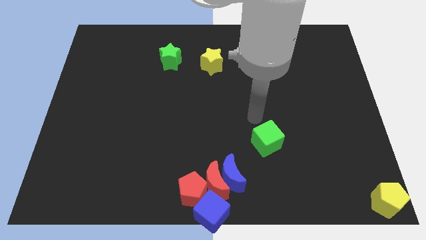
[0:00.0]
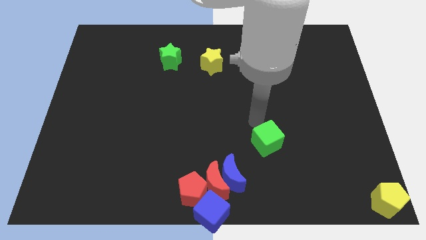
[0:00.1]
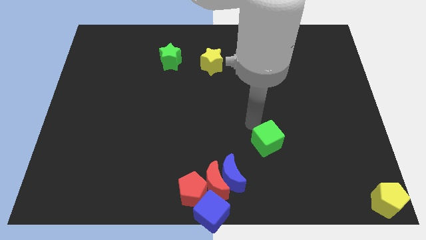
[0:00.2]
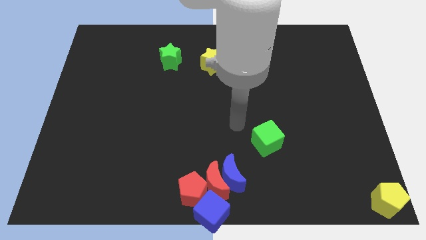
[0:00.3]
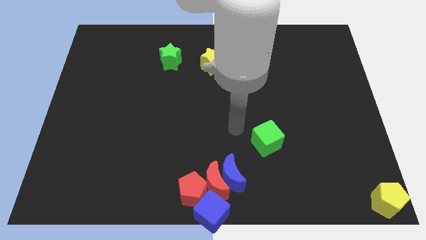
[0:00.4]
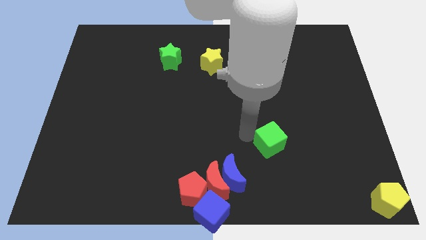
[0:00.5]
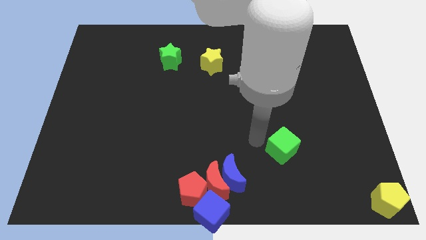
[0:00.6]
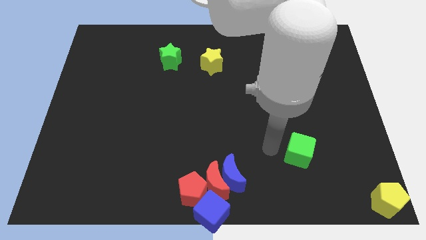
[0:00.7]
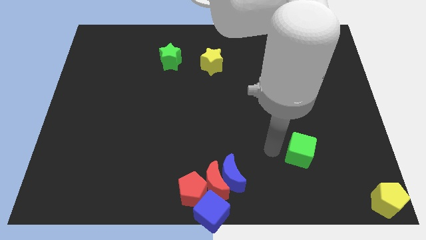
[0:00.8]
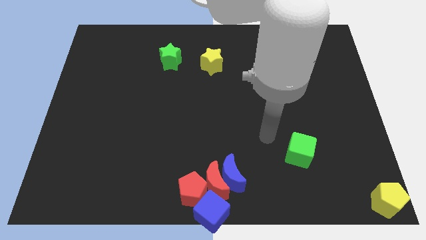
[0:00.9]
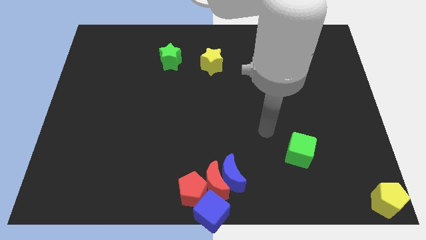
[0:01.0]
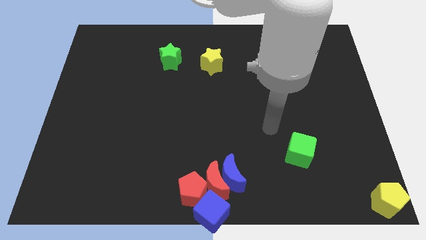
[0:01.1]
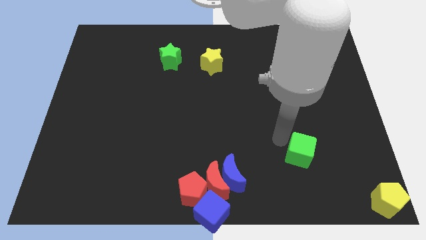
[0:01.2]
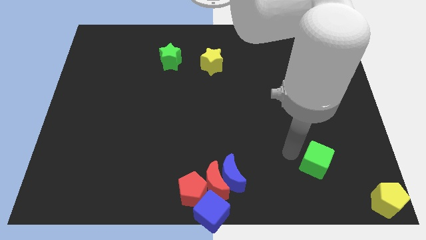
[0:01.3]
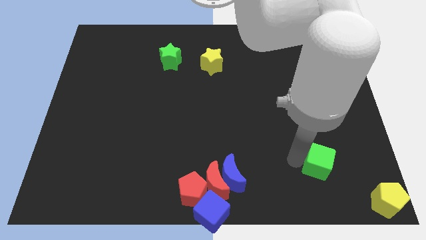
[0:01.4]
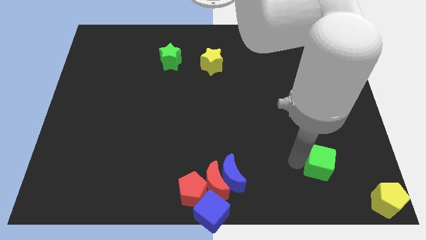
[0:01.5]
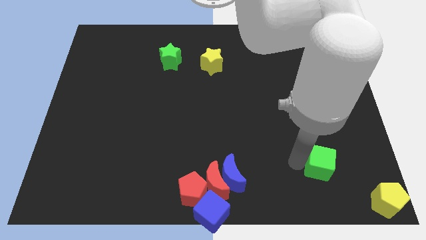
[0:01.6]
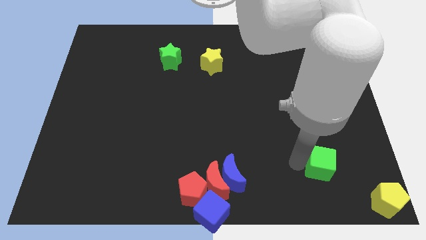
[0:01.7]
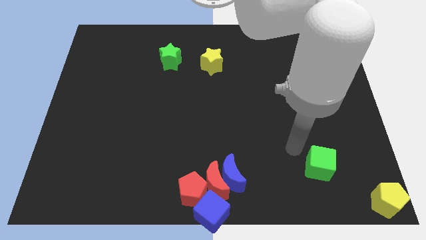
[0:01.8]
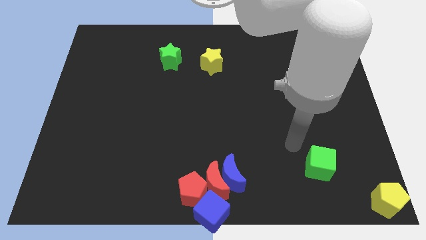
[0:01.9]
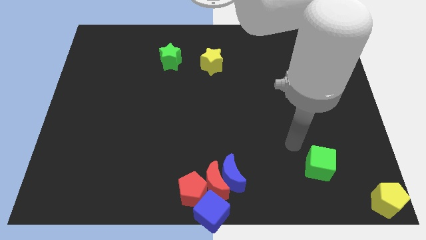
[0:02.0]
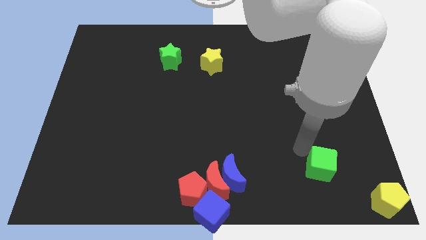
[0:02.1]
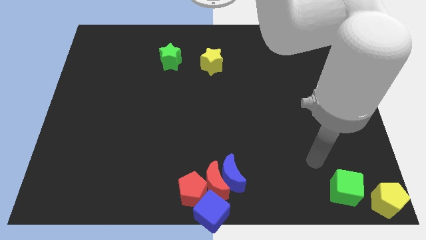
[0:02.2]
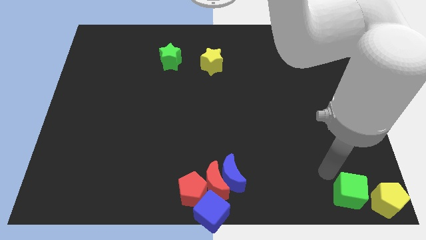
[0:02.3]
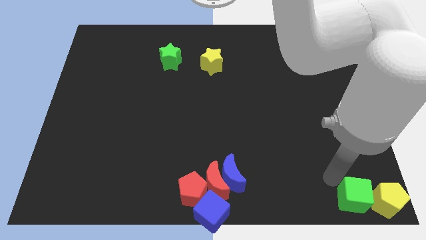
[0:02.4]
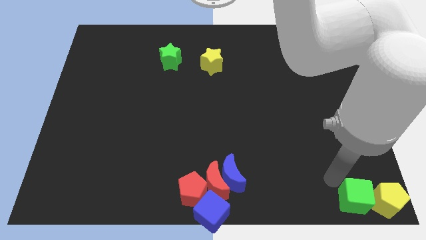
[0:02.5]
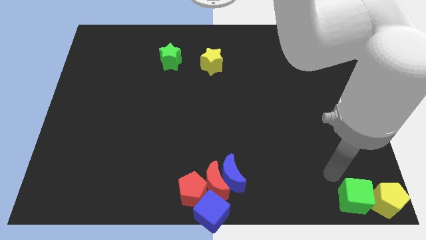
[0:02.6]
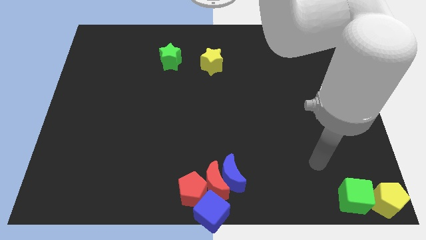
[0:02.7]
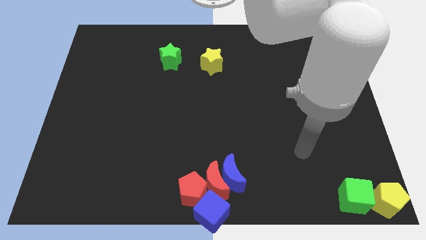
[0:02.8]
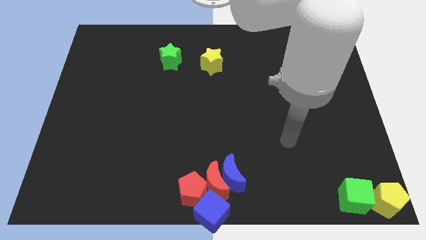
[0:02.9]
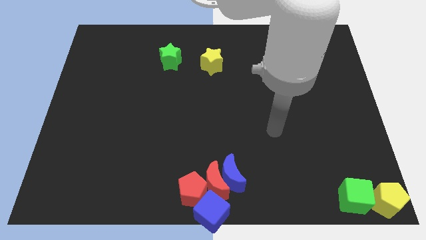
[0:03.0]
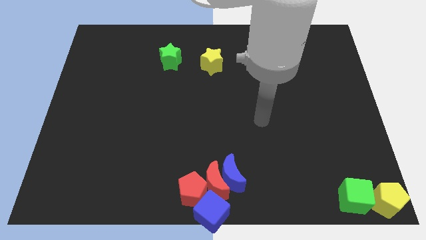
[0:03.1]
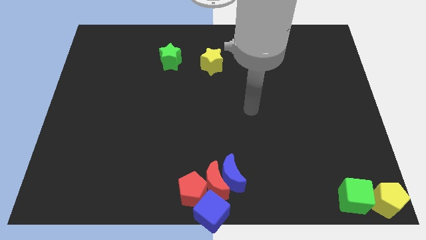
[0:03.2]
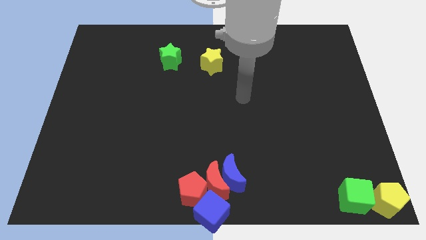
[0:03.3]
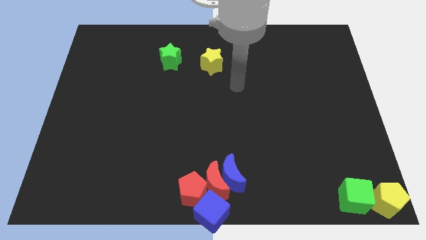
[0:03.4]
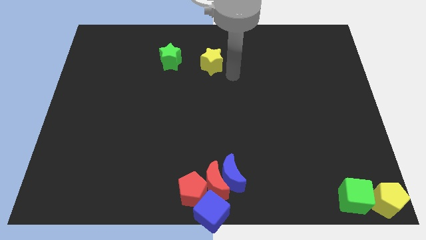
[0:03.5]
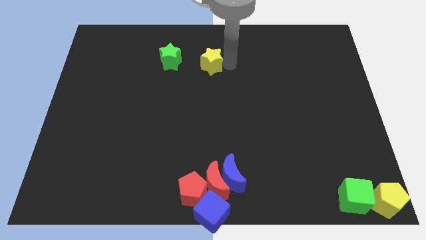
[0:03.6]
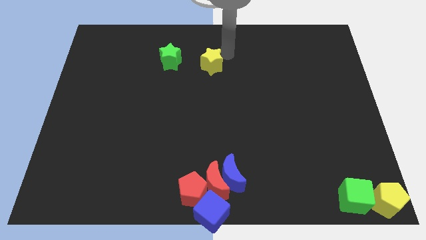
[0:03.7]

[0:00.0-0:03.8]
move the green cube to the top left of the yellow pentagon

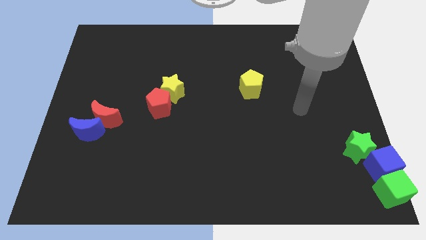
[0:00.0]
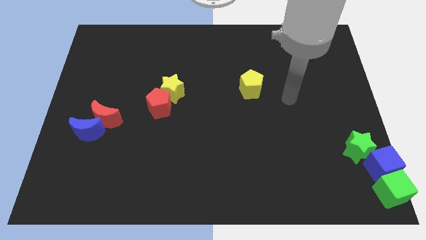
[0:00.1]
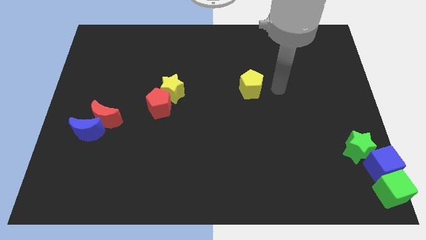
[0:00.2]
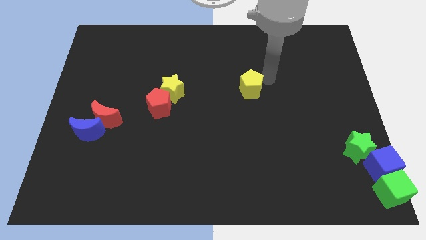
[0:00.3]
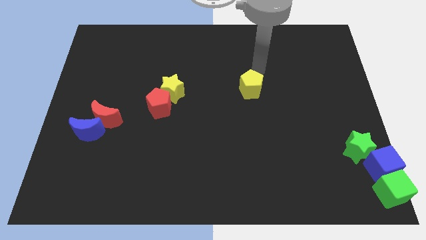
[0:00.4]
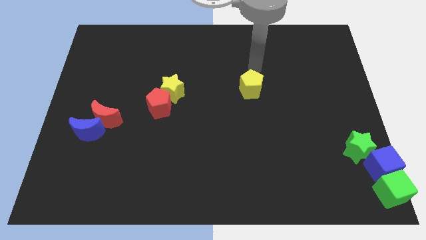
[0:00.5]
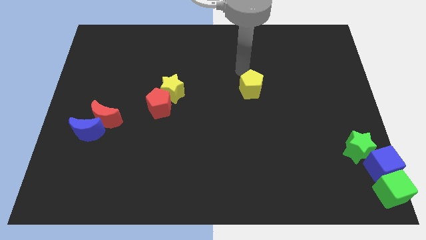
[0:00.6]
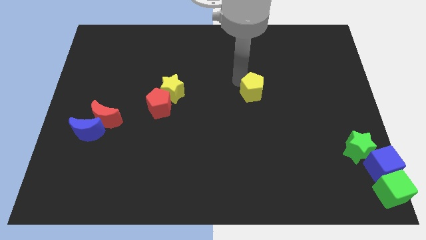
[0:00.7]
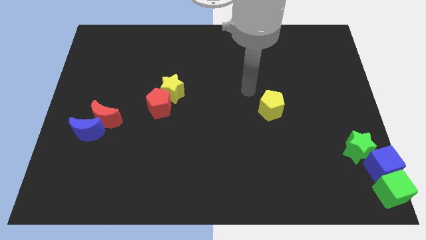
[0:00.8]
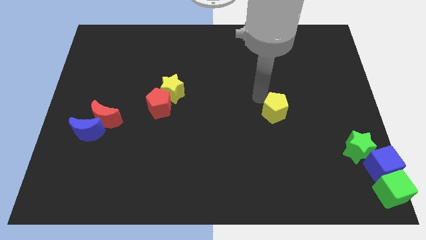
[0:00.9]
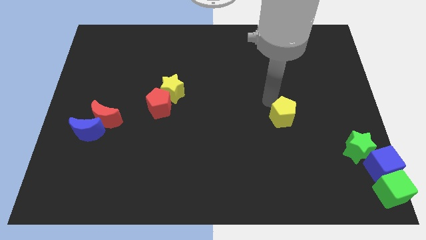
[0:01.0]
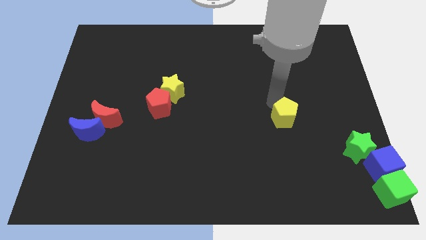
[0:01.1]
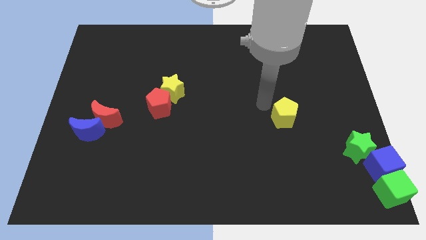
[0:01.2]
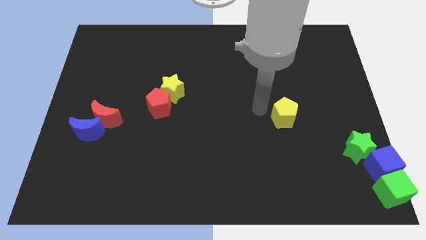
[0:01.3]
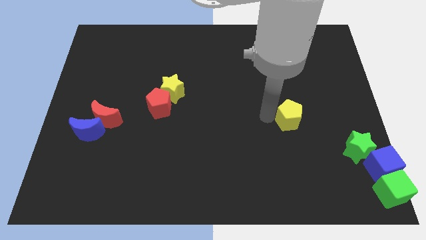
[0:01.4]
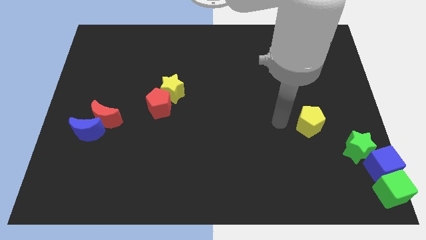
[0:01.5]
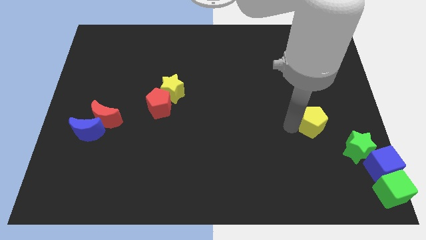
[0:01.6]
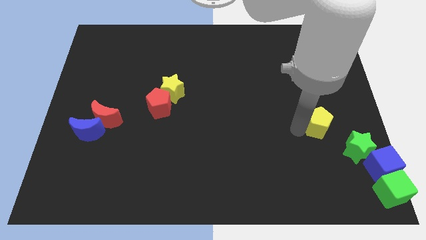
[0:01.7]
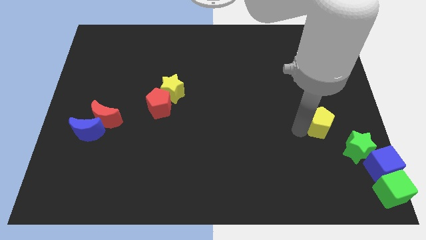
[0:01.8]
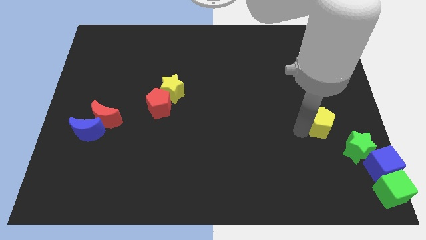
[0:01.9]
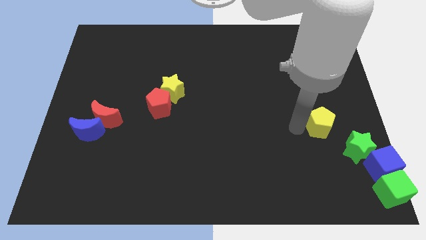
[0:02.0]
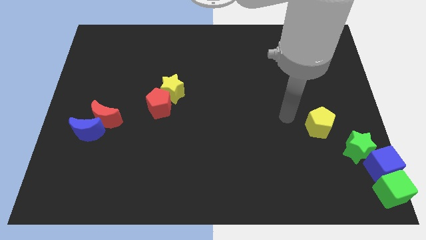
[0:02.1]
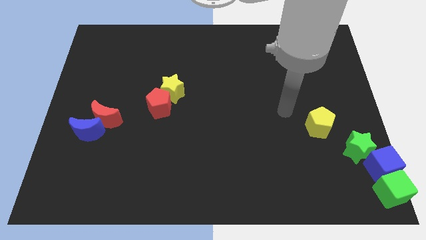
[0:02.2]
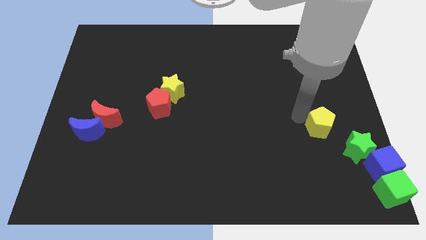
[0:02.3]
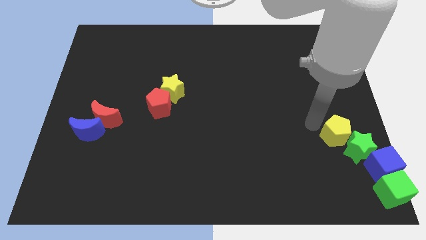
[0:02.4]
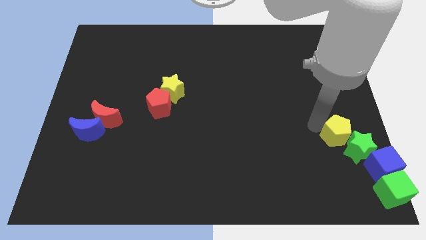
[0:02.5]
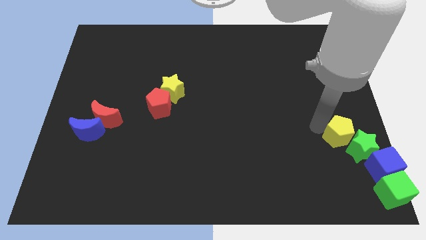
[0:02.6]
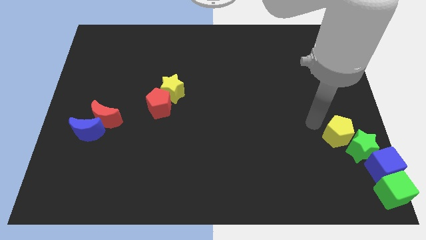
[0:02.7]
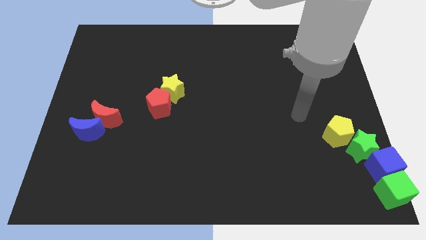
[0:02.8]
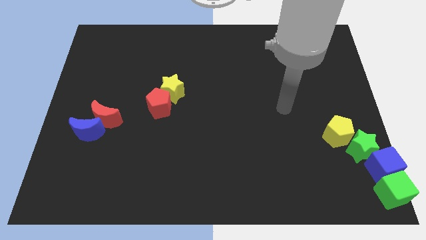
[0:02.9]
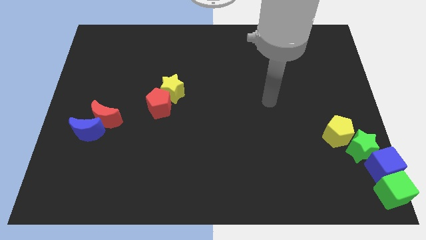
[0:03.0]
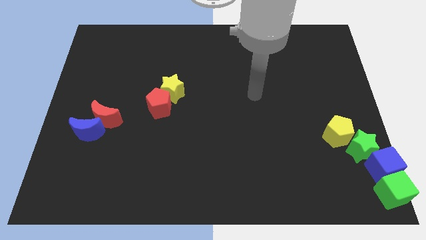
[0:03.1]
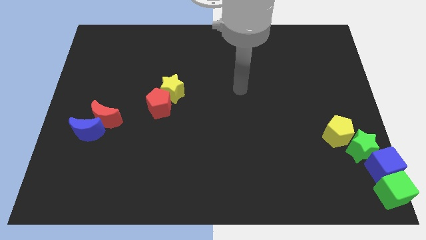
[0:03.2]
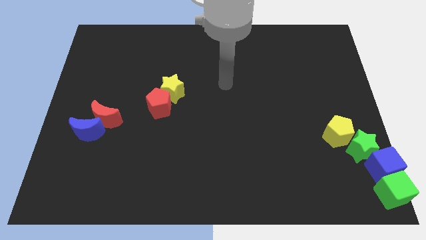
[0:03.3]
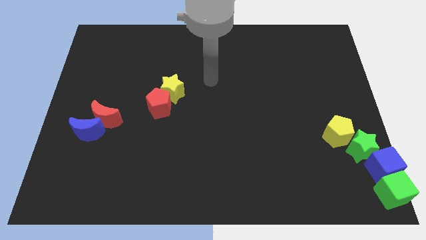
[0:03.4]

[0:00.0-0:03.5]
move the yellow pentagon above the green star

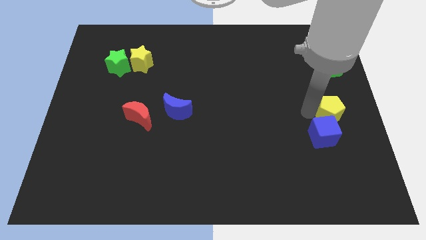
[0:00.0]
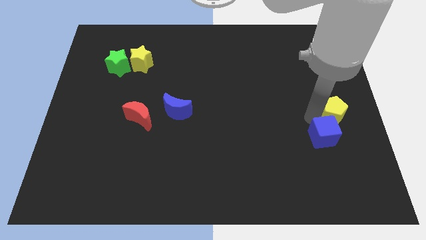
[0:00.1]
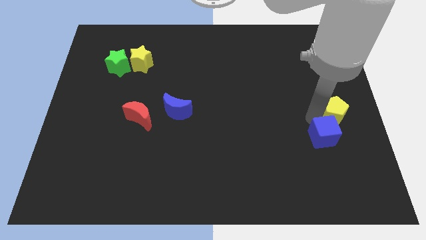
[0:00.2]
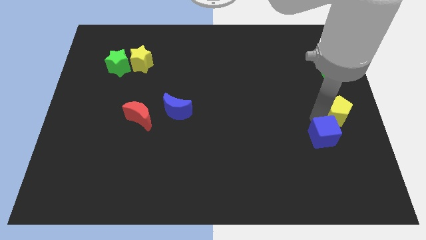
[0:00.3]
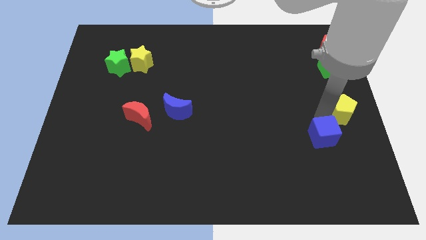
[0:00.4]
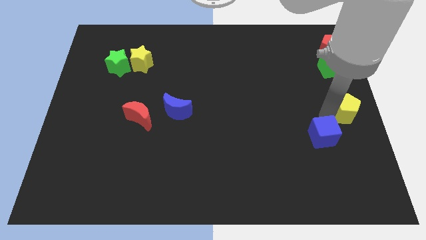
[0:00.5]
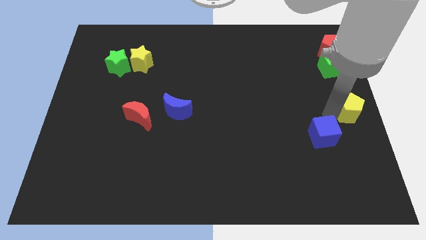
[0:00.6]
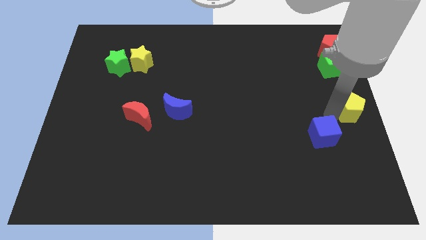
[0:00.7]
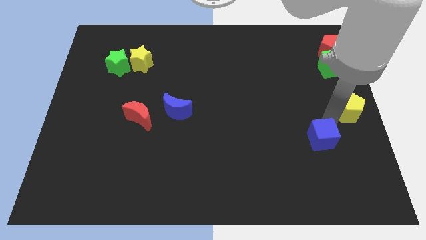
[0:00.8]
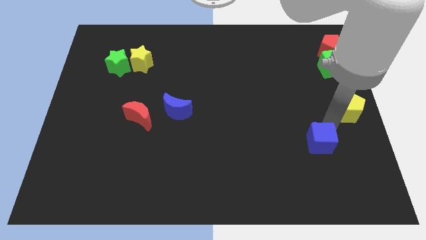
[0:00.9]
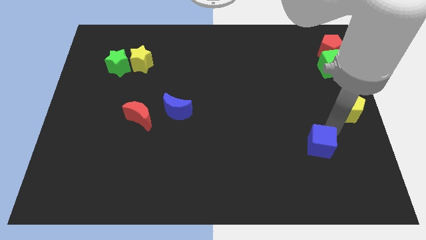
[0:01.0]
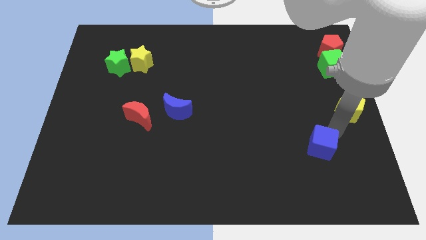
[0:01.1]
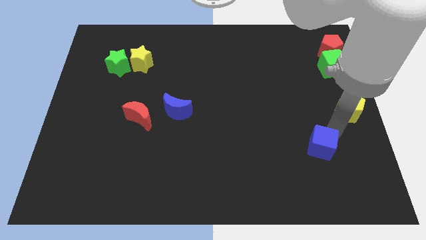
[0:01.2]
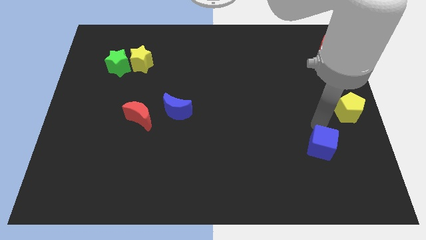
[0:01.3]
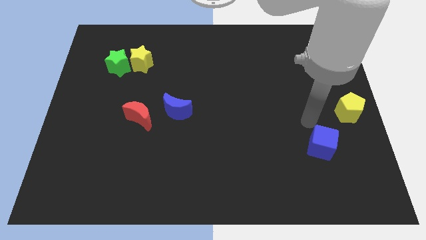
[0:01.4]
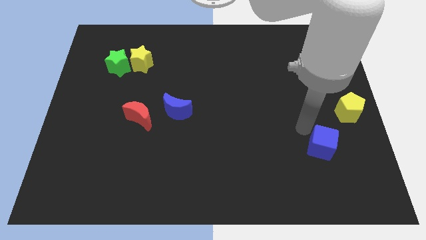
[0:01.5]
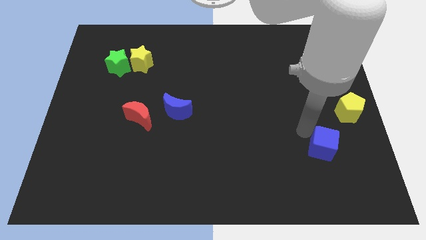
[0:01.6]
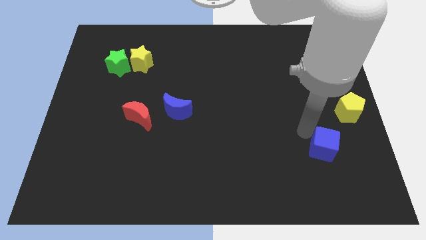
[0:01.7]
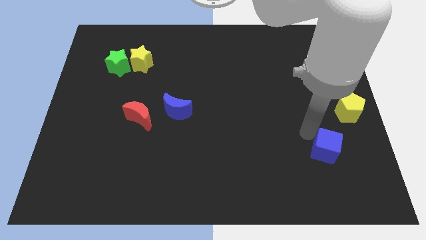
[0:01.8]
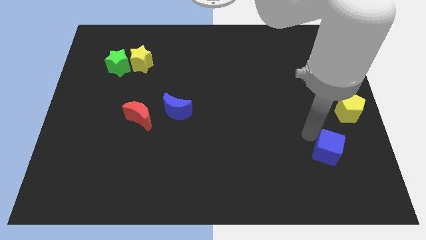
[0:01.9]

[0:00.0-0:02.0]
separate blue block from the yellow pentagon
